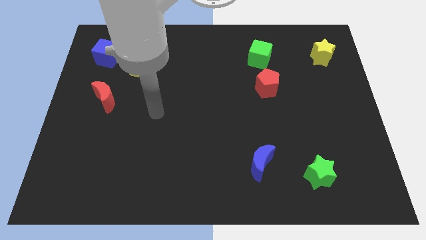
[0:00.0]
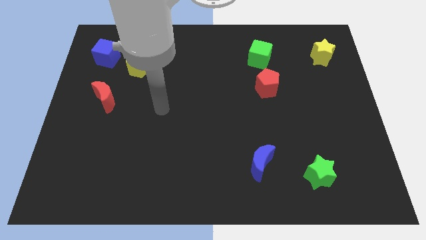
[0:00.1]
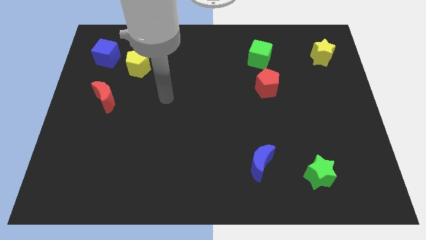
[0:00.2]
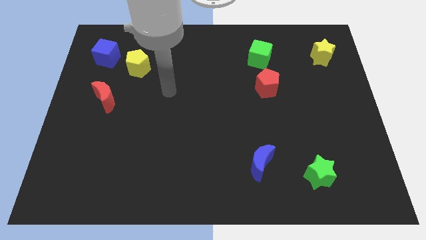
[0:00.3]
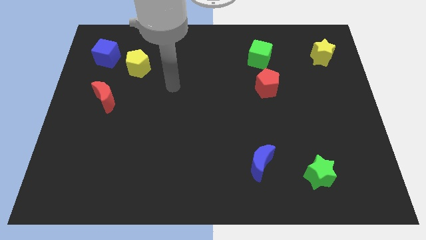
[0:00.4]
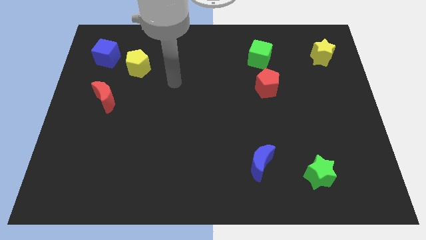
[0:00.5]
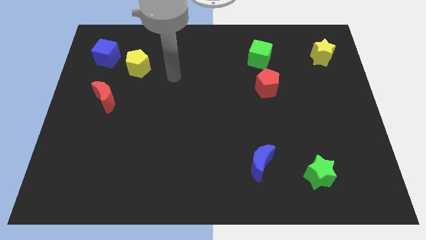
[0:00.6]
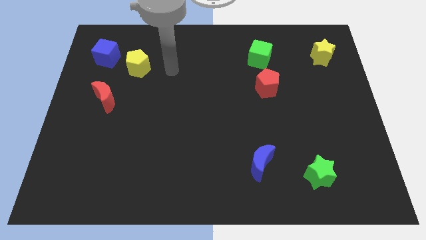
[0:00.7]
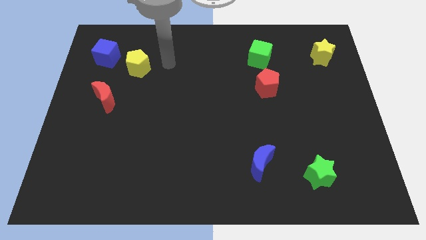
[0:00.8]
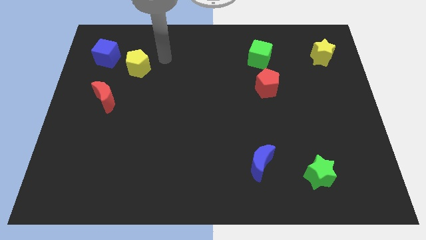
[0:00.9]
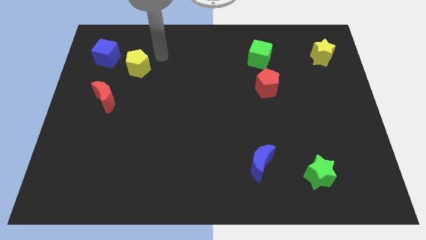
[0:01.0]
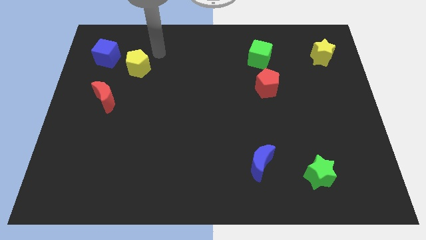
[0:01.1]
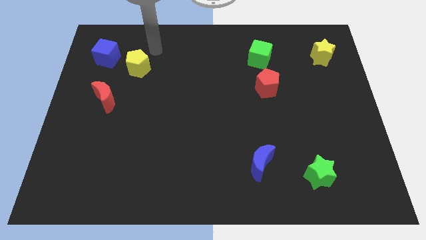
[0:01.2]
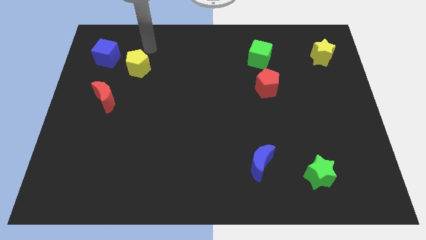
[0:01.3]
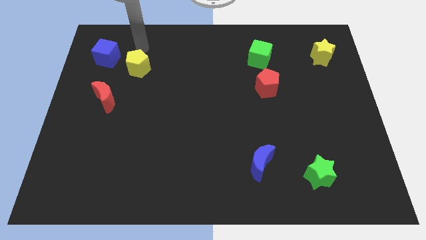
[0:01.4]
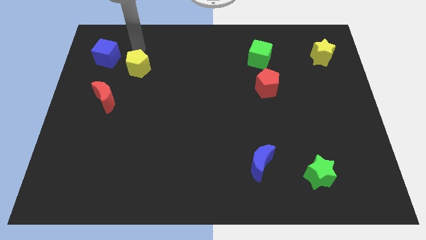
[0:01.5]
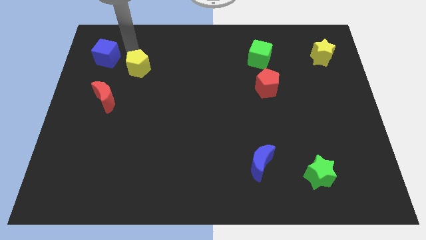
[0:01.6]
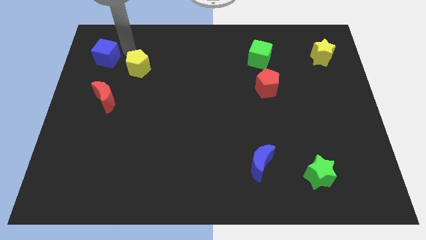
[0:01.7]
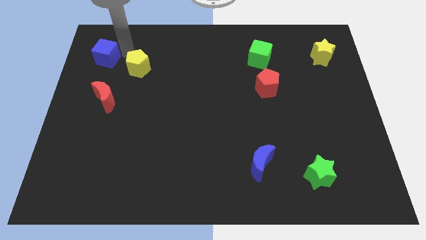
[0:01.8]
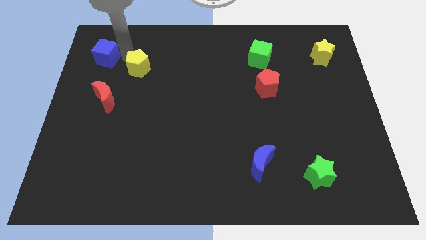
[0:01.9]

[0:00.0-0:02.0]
move the arm near yellow pentagon

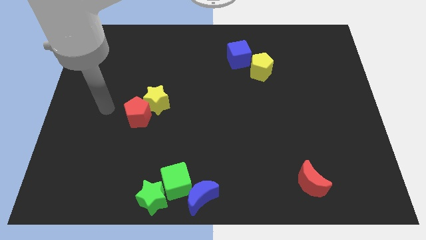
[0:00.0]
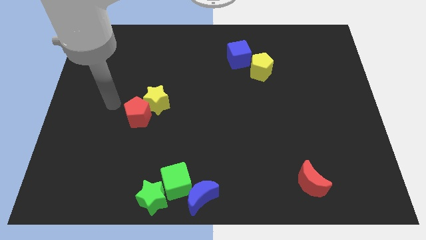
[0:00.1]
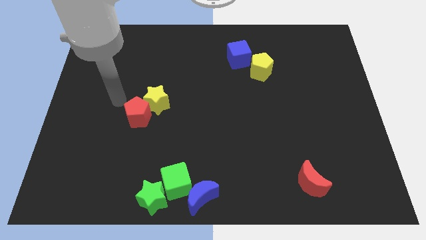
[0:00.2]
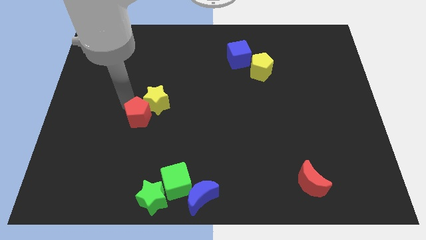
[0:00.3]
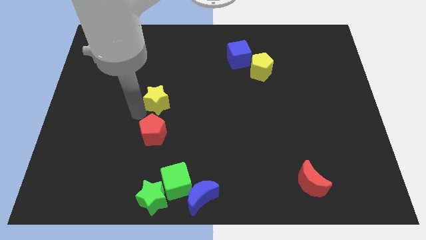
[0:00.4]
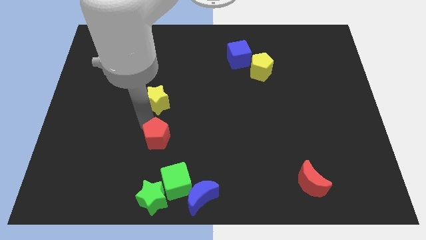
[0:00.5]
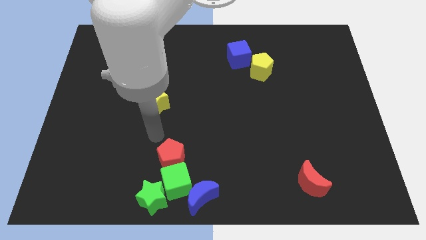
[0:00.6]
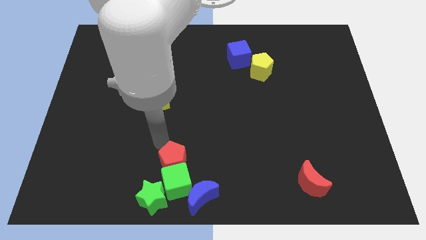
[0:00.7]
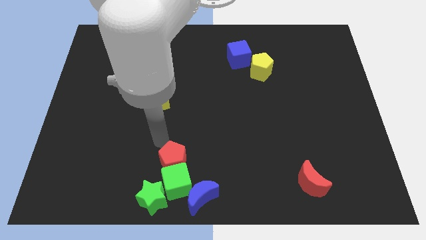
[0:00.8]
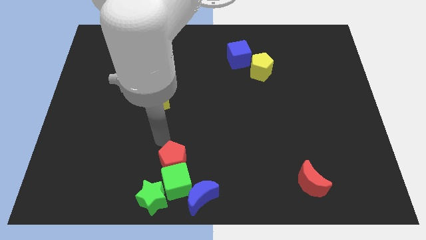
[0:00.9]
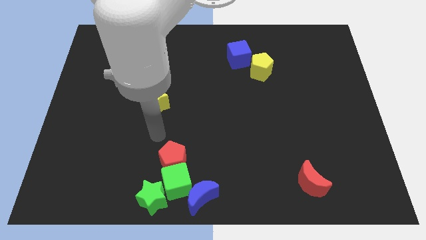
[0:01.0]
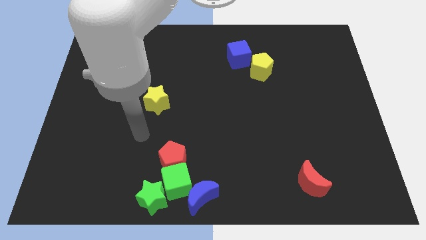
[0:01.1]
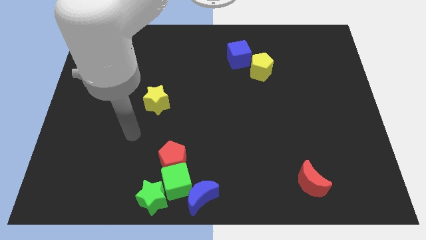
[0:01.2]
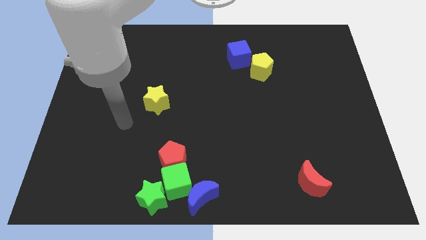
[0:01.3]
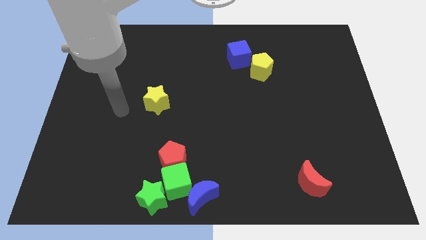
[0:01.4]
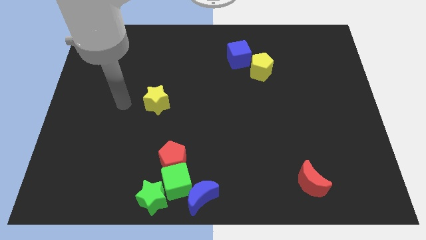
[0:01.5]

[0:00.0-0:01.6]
push red pentagon into green cube

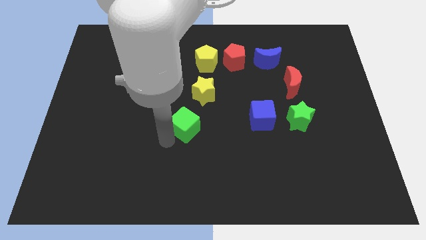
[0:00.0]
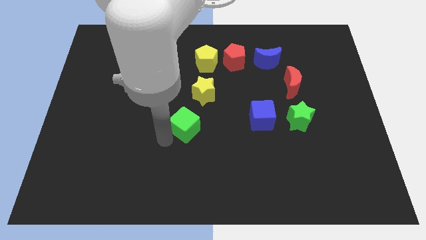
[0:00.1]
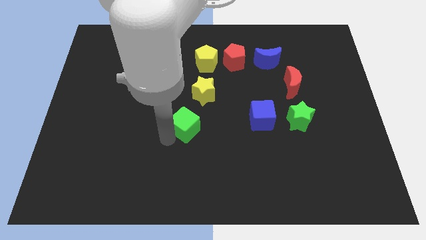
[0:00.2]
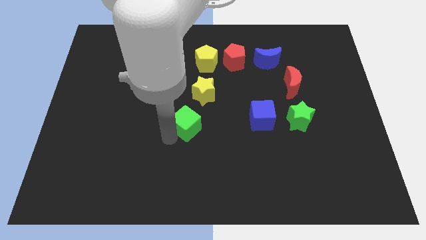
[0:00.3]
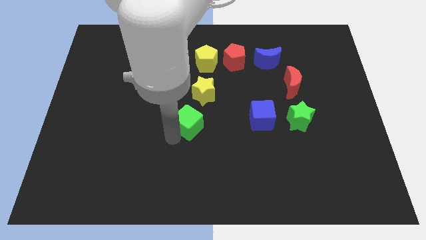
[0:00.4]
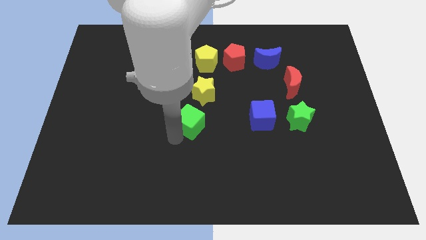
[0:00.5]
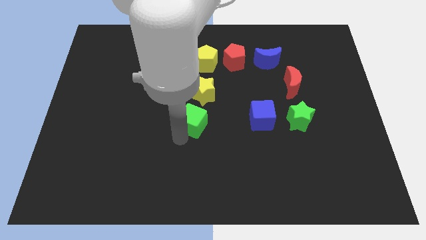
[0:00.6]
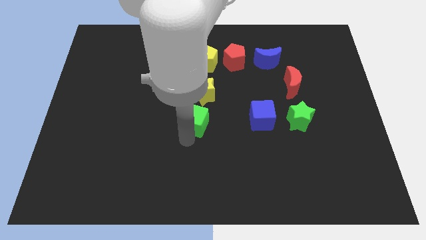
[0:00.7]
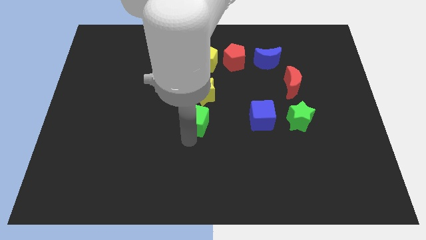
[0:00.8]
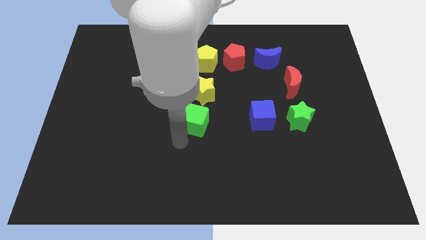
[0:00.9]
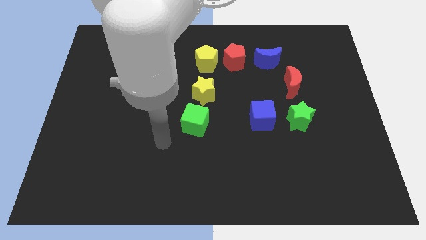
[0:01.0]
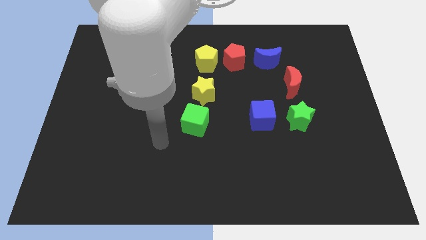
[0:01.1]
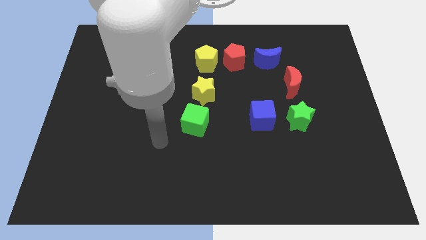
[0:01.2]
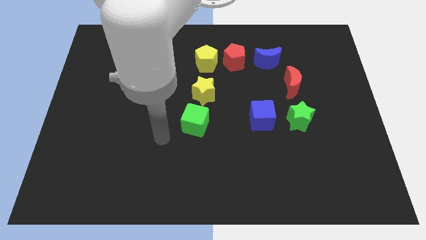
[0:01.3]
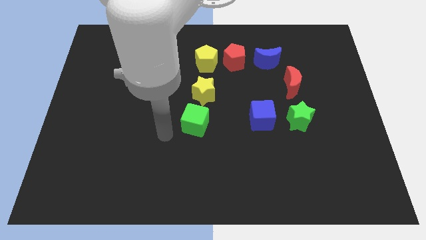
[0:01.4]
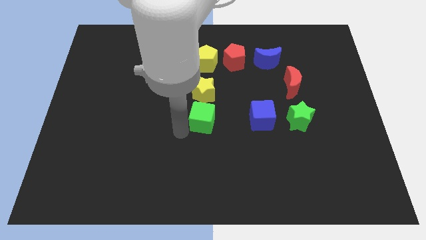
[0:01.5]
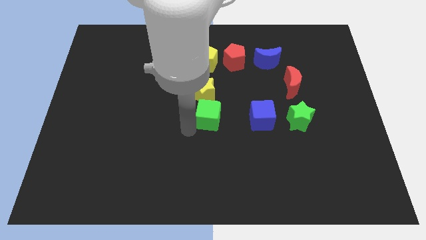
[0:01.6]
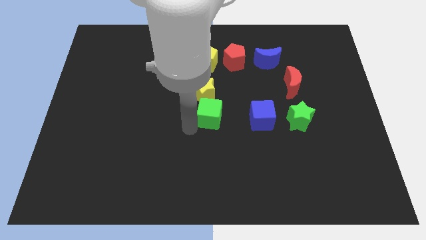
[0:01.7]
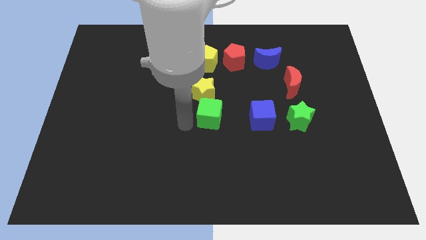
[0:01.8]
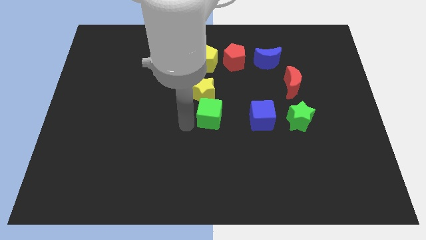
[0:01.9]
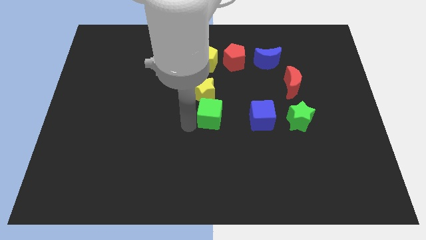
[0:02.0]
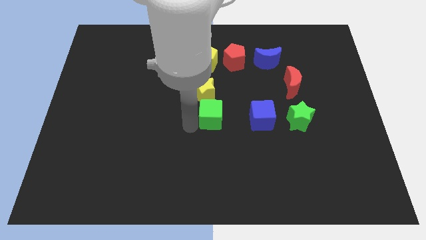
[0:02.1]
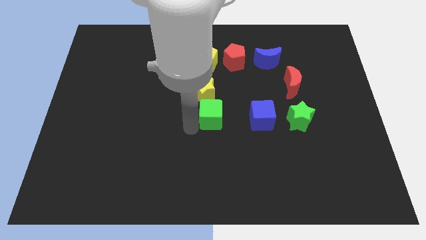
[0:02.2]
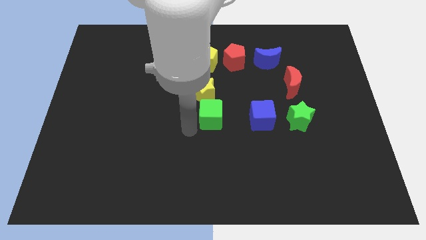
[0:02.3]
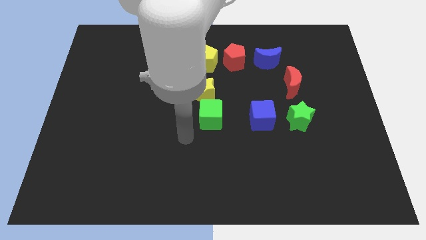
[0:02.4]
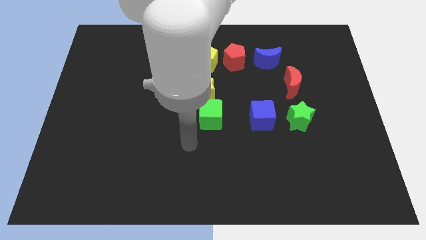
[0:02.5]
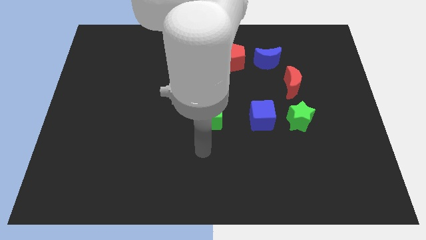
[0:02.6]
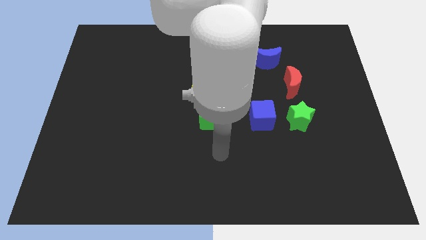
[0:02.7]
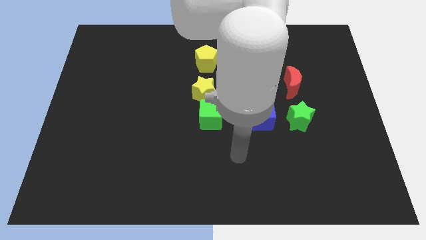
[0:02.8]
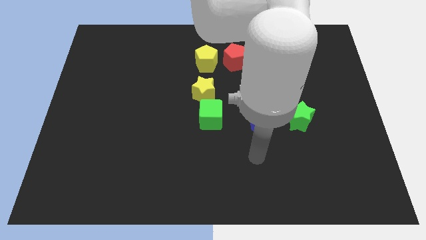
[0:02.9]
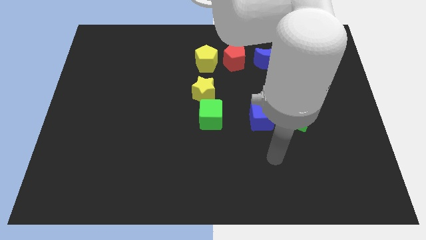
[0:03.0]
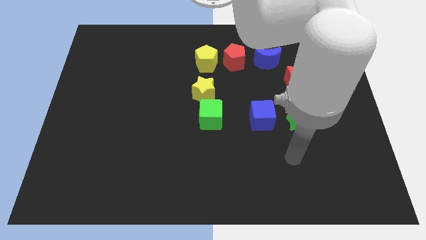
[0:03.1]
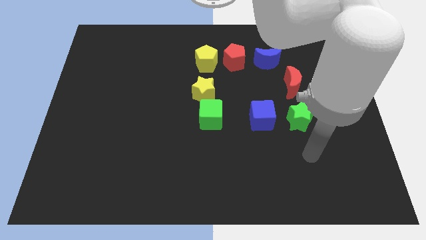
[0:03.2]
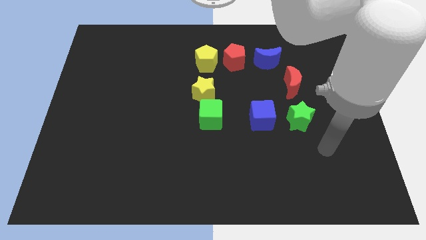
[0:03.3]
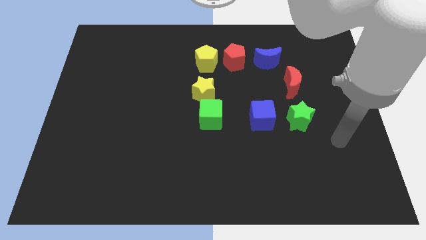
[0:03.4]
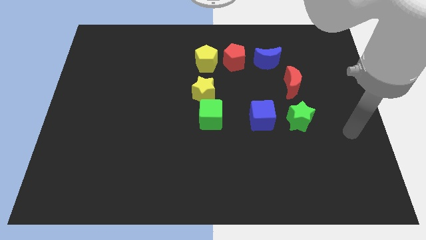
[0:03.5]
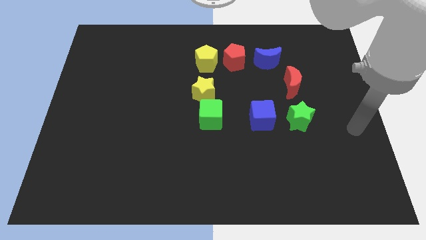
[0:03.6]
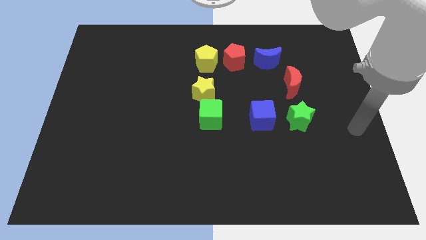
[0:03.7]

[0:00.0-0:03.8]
move the green cube underneath the yellow star

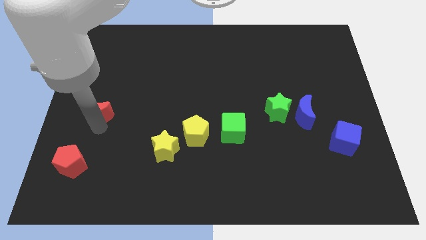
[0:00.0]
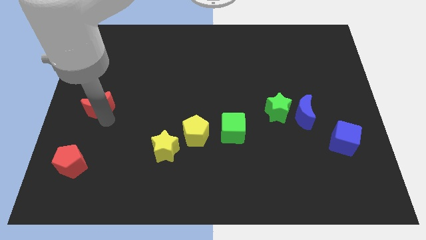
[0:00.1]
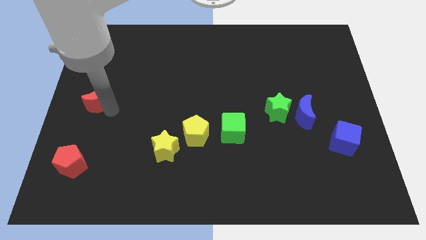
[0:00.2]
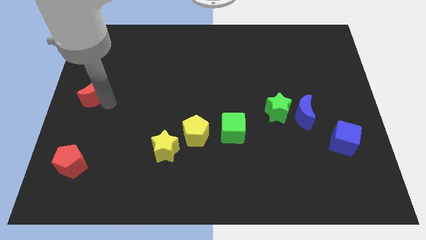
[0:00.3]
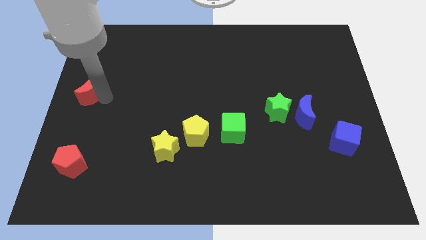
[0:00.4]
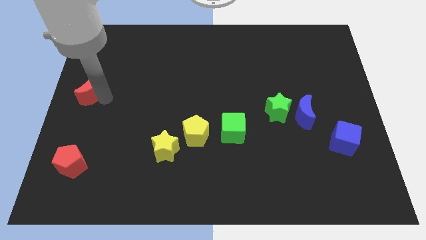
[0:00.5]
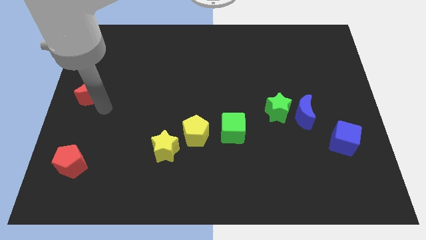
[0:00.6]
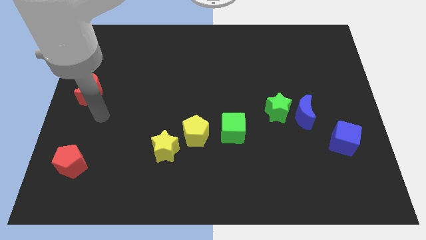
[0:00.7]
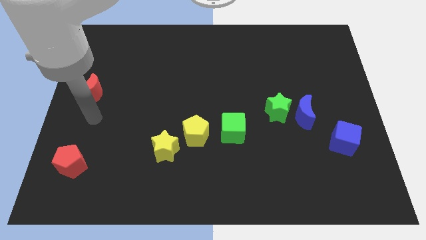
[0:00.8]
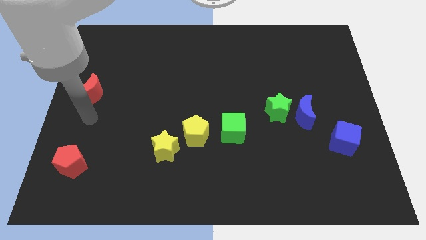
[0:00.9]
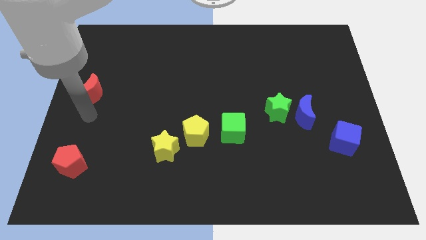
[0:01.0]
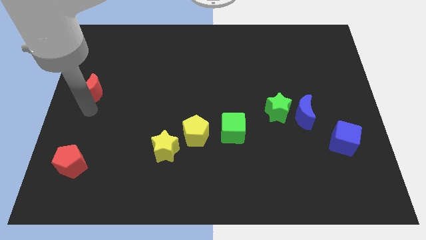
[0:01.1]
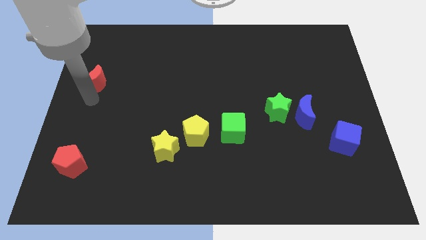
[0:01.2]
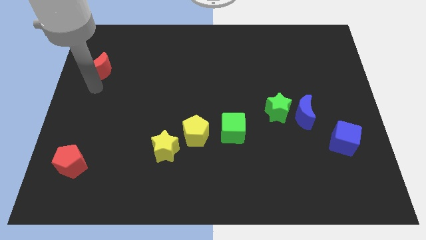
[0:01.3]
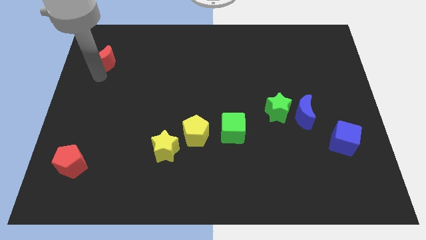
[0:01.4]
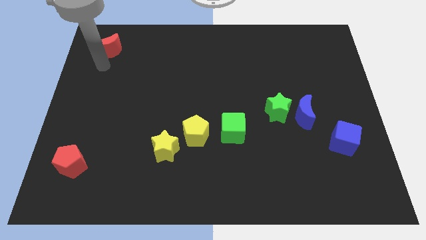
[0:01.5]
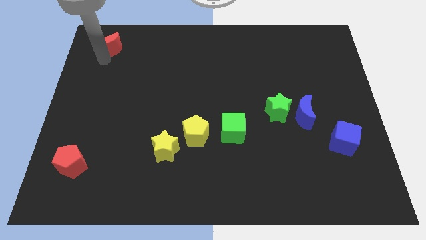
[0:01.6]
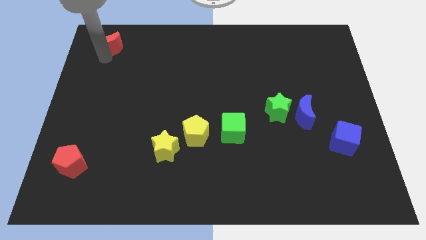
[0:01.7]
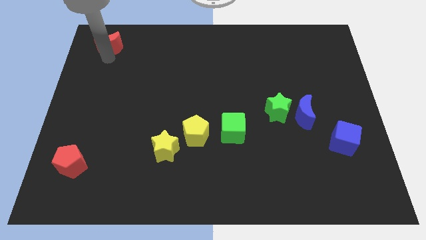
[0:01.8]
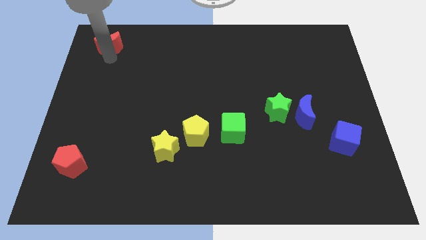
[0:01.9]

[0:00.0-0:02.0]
slide the red moon towards the top left
